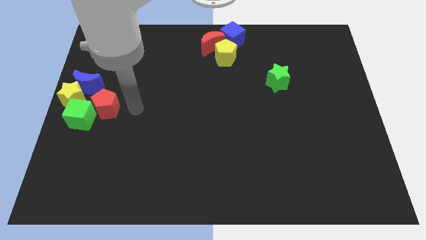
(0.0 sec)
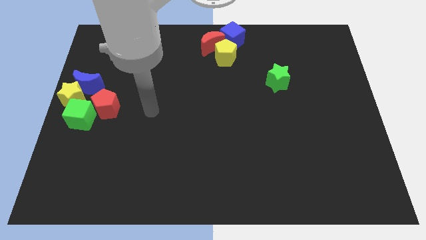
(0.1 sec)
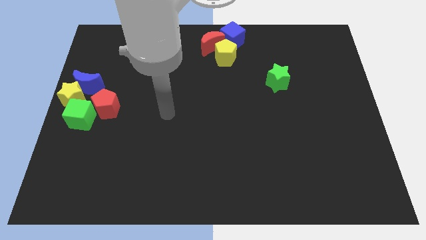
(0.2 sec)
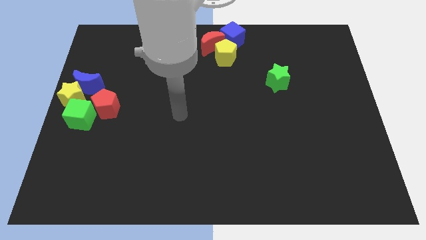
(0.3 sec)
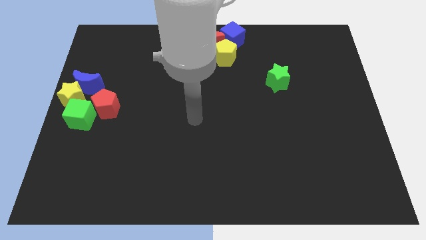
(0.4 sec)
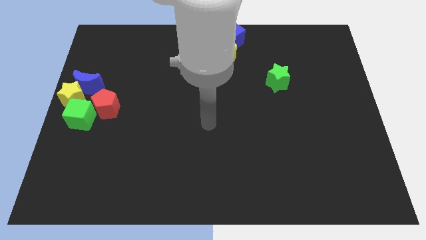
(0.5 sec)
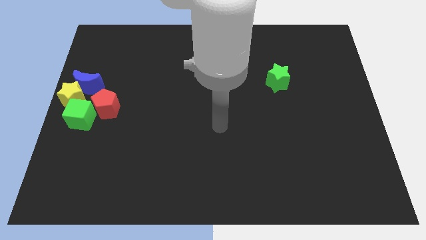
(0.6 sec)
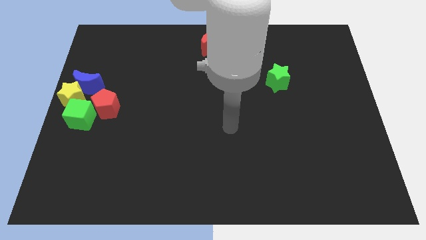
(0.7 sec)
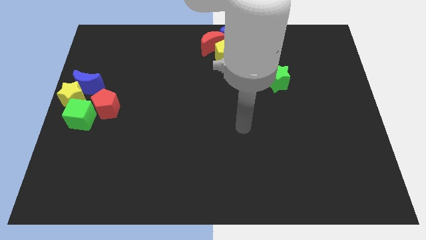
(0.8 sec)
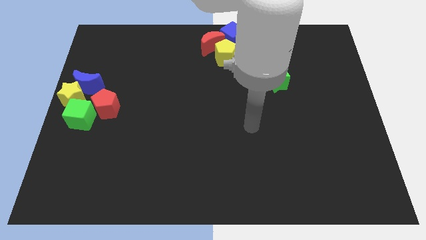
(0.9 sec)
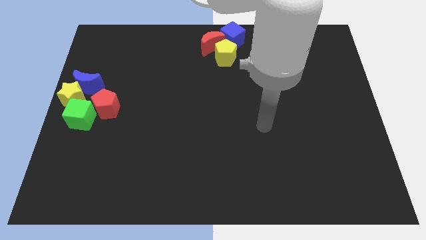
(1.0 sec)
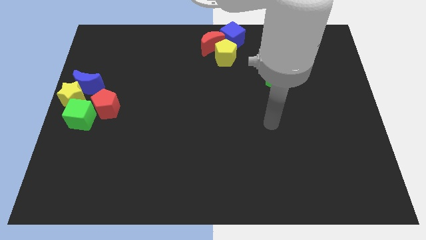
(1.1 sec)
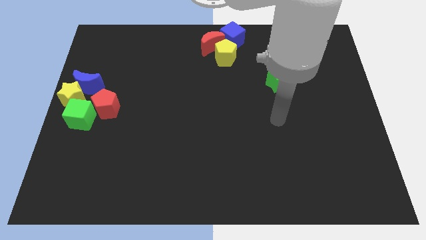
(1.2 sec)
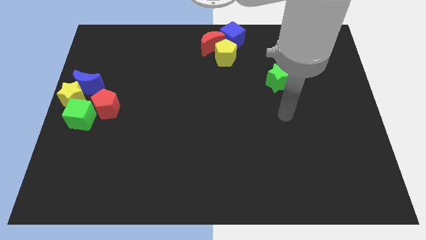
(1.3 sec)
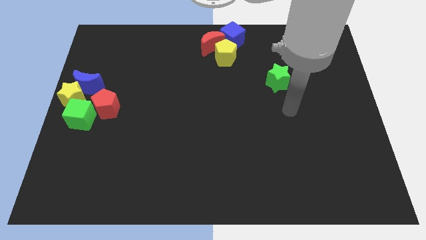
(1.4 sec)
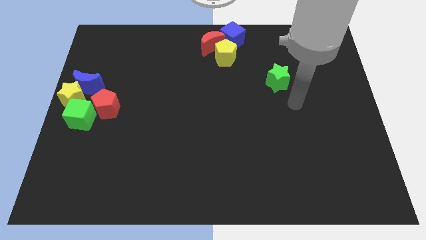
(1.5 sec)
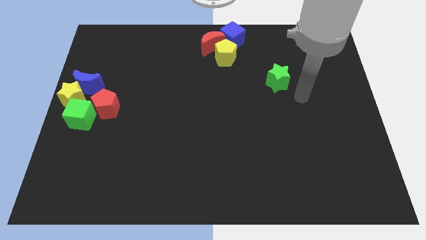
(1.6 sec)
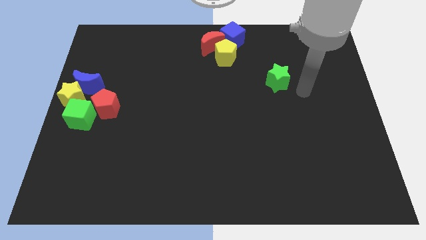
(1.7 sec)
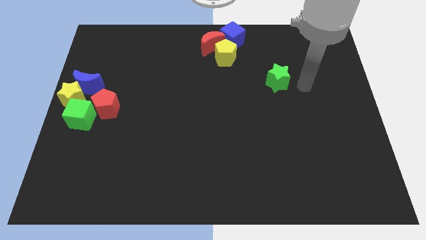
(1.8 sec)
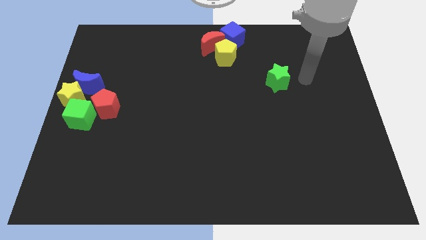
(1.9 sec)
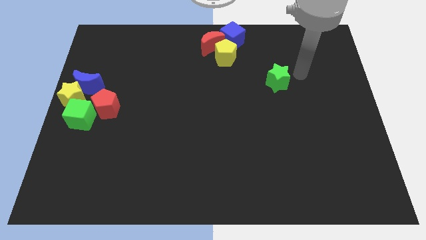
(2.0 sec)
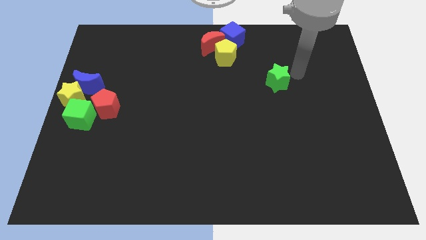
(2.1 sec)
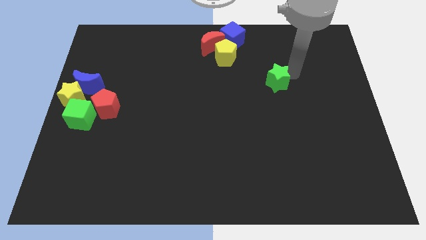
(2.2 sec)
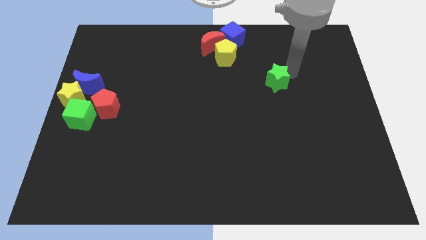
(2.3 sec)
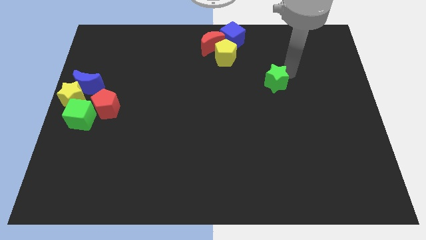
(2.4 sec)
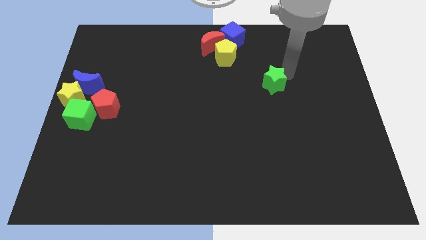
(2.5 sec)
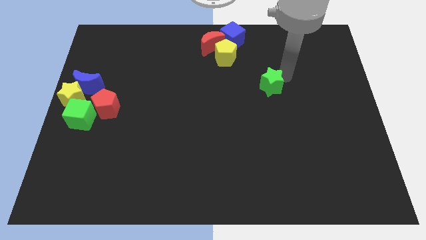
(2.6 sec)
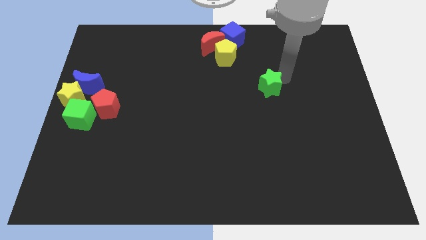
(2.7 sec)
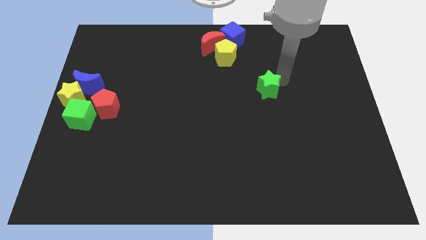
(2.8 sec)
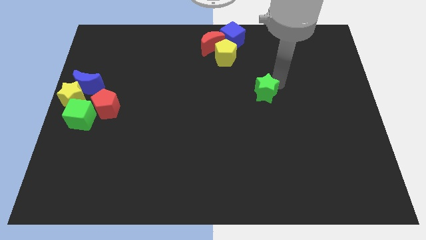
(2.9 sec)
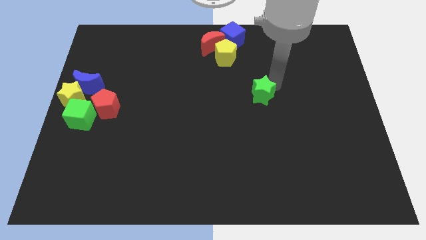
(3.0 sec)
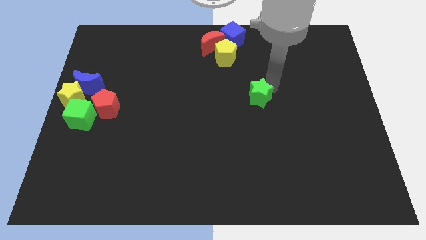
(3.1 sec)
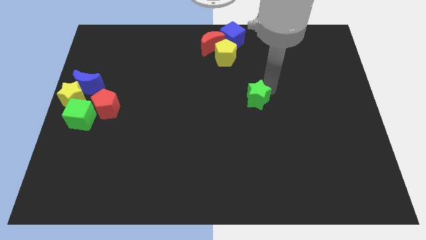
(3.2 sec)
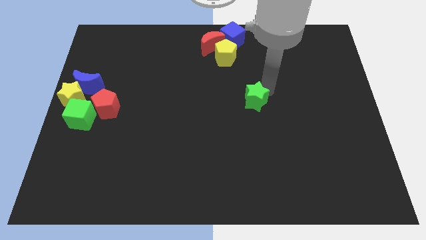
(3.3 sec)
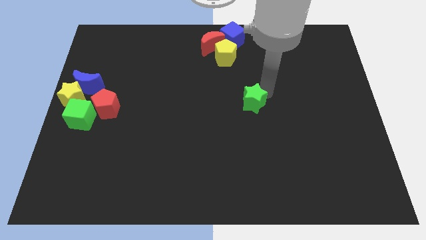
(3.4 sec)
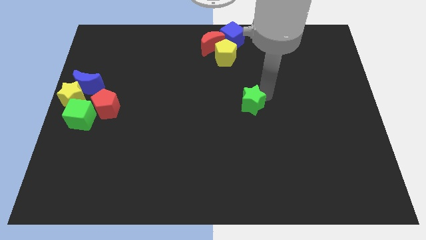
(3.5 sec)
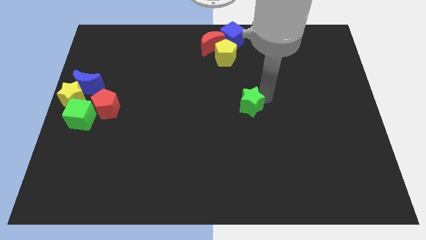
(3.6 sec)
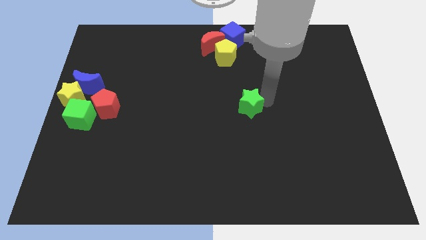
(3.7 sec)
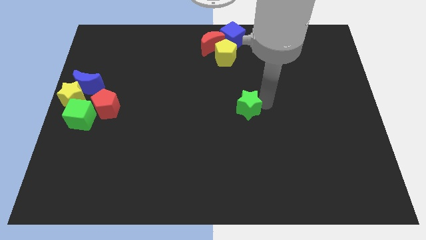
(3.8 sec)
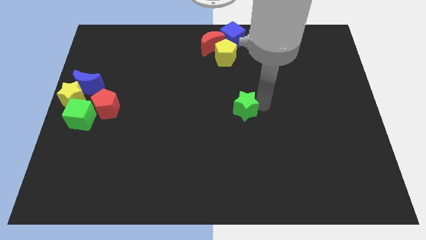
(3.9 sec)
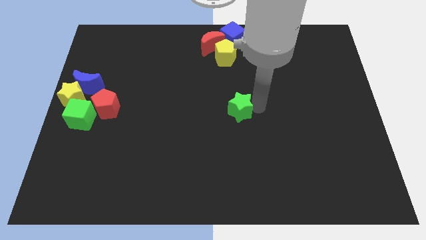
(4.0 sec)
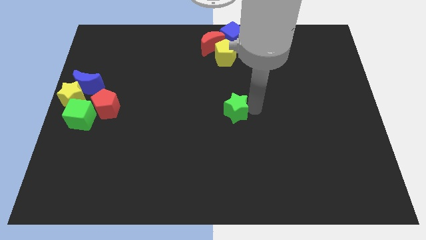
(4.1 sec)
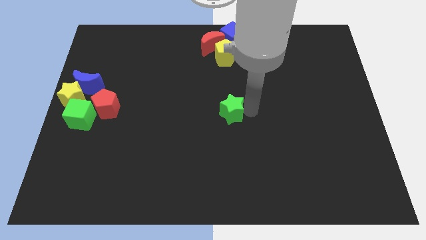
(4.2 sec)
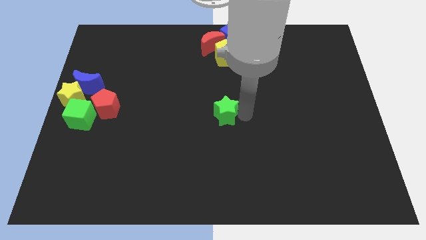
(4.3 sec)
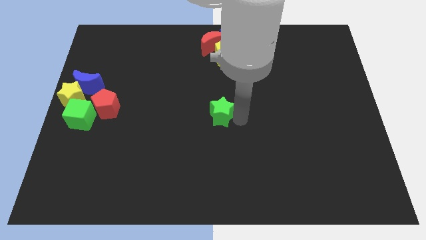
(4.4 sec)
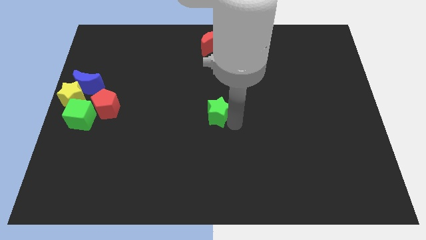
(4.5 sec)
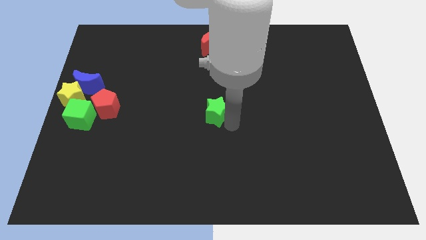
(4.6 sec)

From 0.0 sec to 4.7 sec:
place the green star at the center of the board

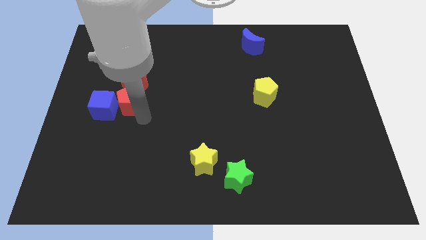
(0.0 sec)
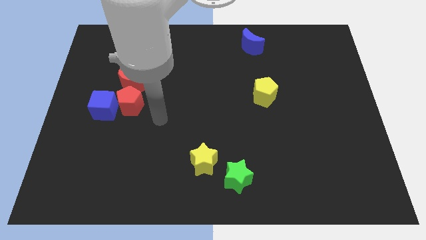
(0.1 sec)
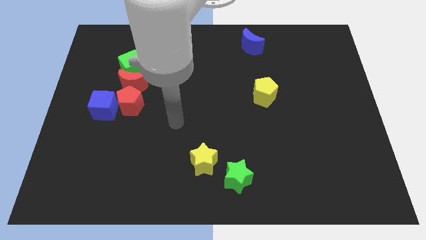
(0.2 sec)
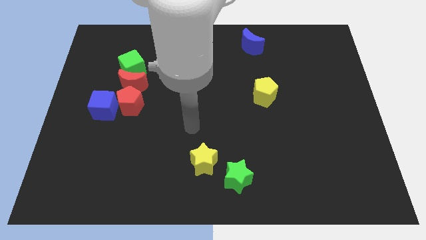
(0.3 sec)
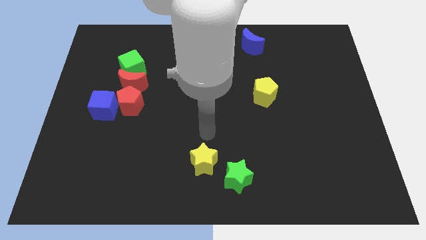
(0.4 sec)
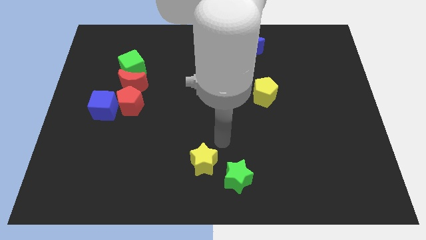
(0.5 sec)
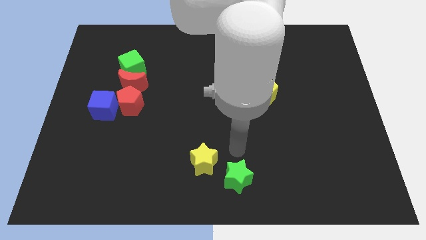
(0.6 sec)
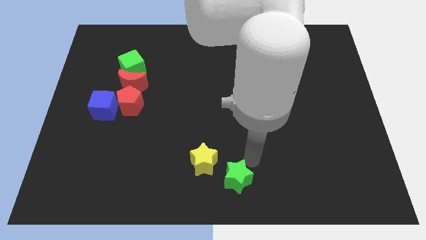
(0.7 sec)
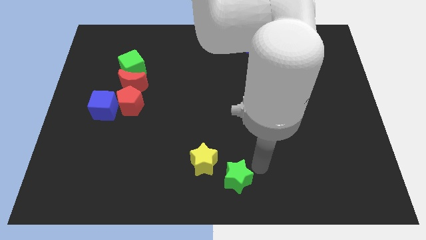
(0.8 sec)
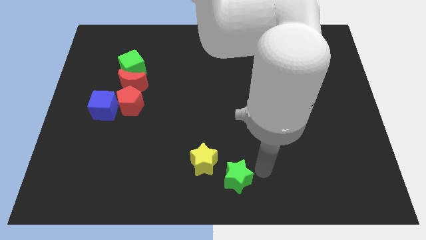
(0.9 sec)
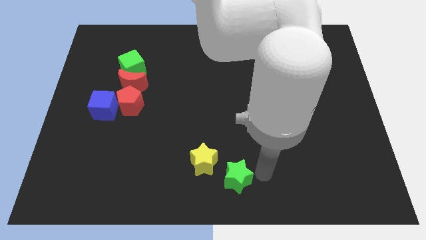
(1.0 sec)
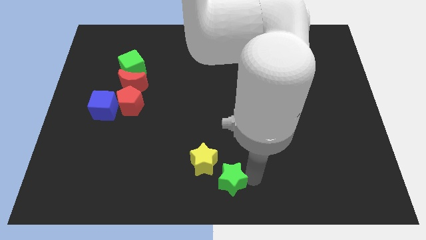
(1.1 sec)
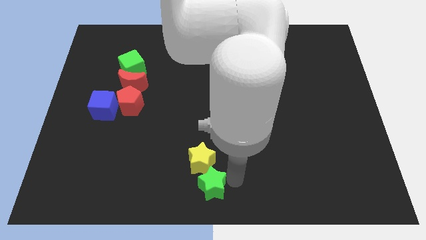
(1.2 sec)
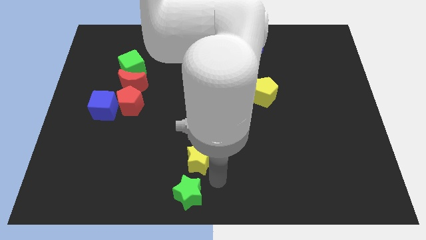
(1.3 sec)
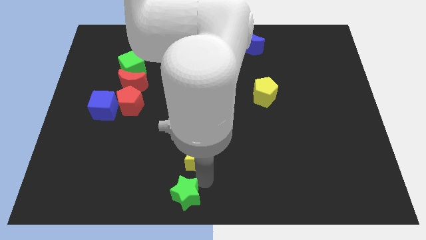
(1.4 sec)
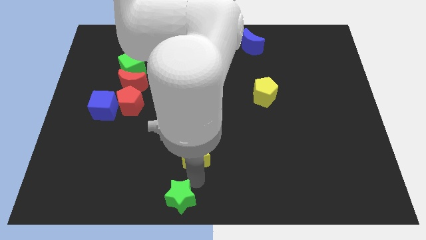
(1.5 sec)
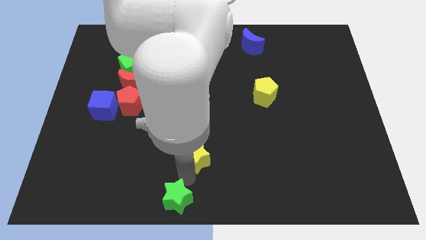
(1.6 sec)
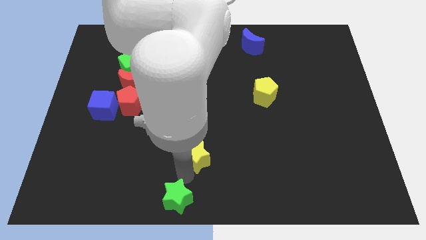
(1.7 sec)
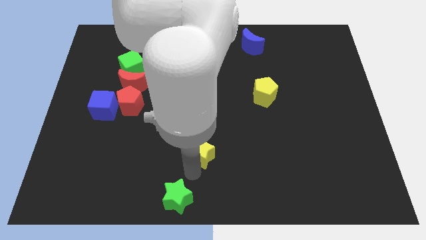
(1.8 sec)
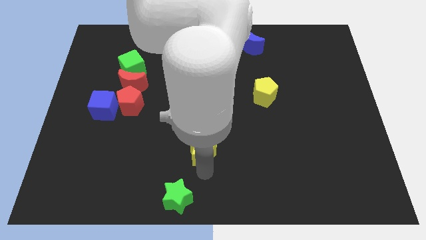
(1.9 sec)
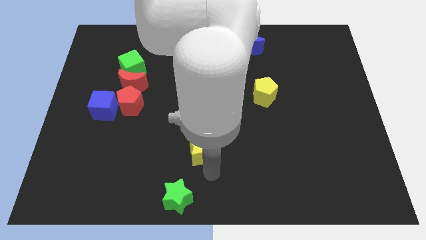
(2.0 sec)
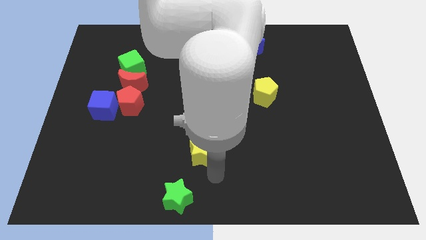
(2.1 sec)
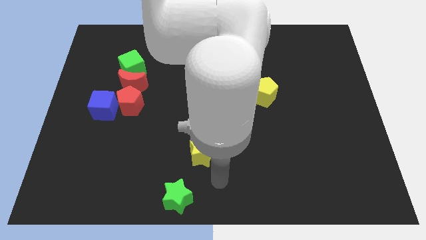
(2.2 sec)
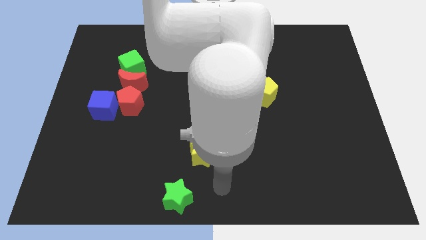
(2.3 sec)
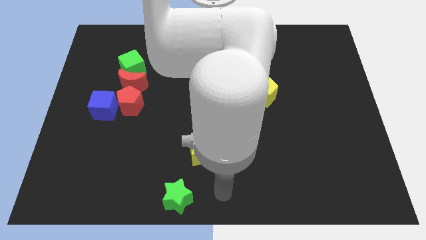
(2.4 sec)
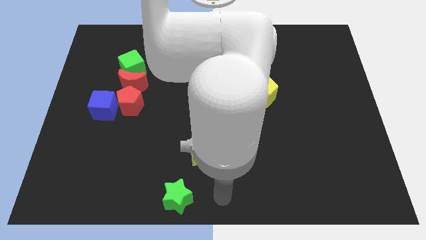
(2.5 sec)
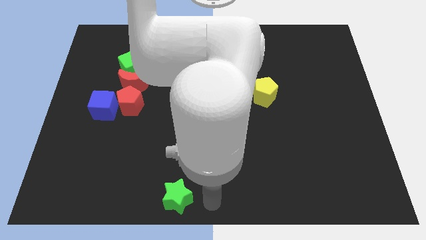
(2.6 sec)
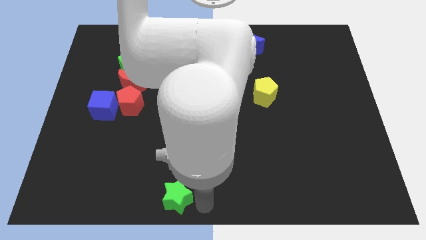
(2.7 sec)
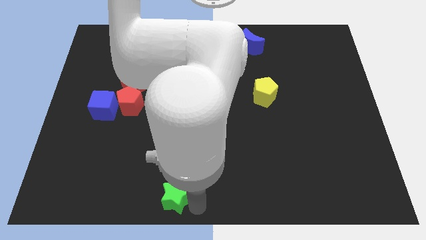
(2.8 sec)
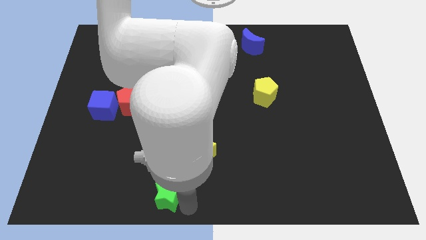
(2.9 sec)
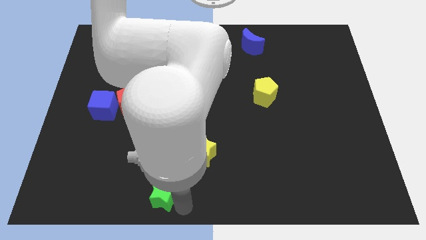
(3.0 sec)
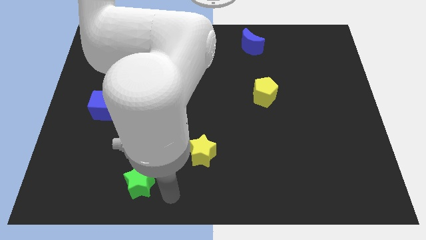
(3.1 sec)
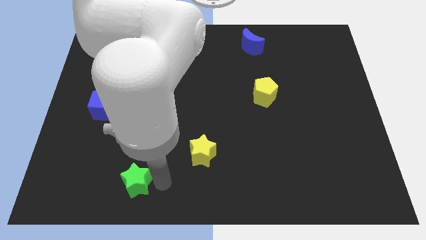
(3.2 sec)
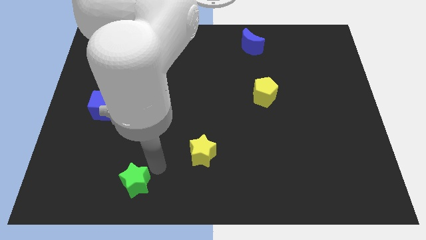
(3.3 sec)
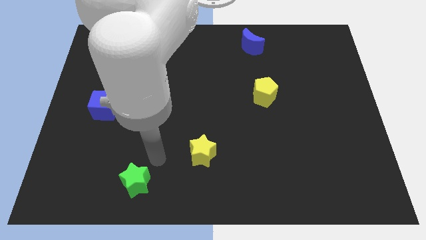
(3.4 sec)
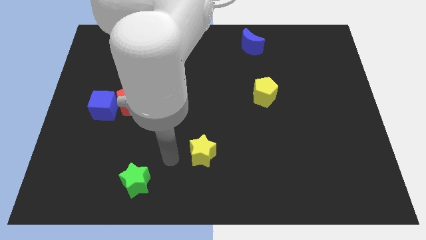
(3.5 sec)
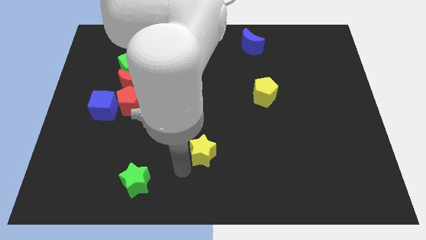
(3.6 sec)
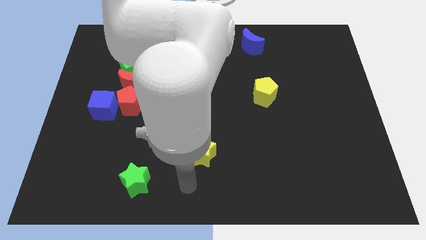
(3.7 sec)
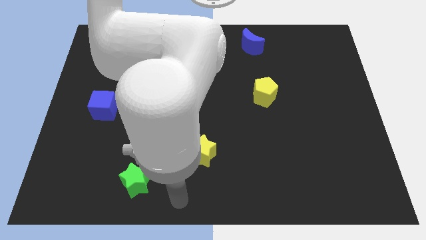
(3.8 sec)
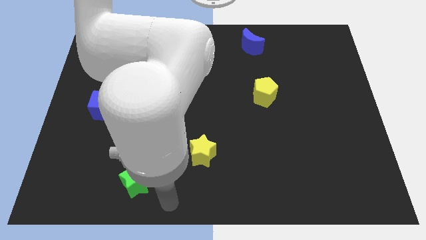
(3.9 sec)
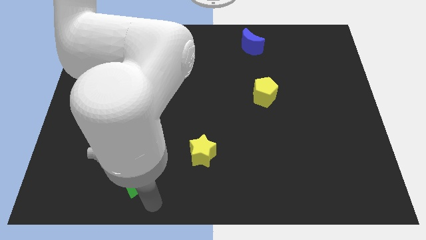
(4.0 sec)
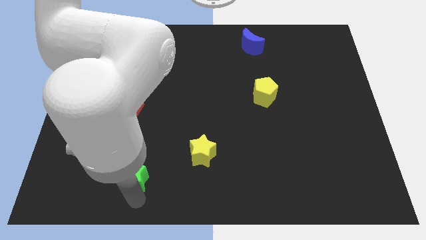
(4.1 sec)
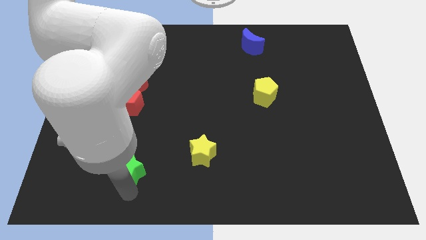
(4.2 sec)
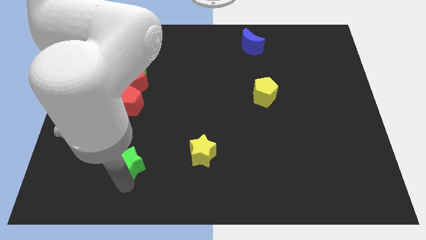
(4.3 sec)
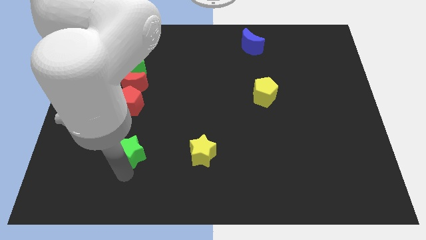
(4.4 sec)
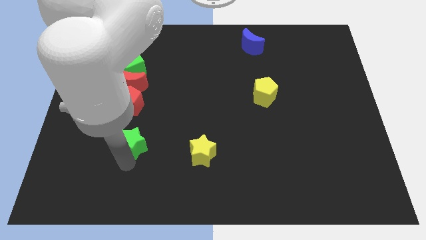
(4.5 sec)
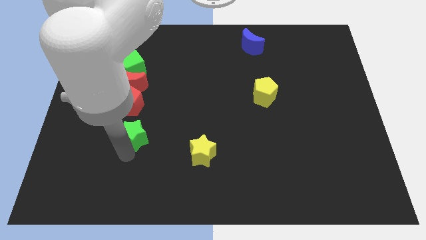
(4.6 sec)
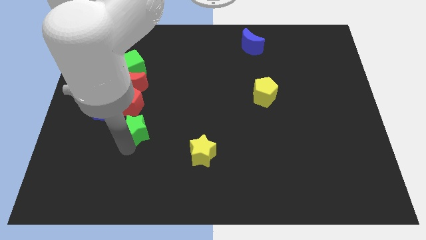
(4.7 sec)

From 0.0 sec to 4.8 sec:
place the green star below the red pentagon
